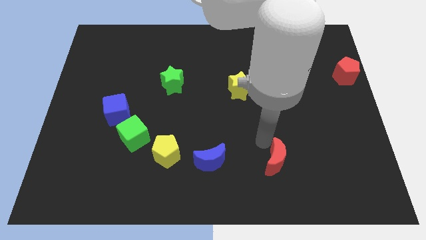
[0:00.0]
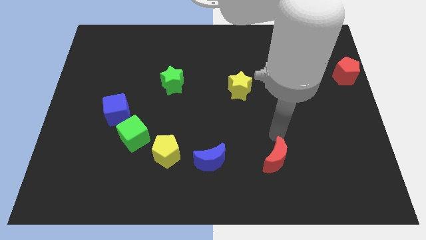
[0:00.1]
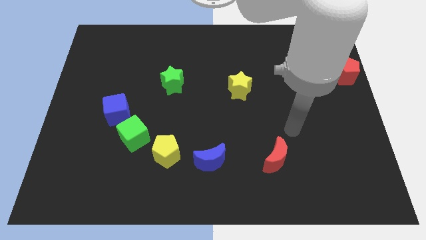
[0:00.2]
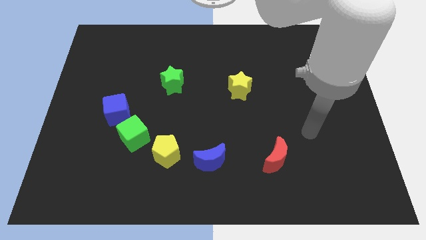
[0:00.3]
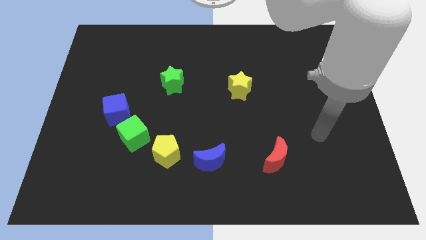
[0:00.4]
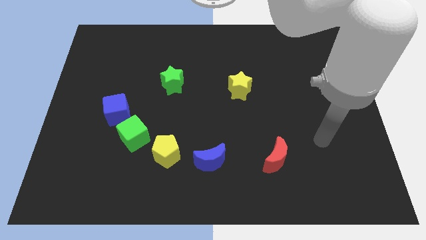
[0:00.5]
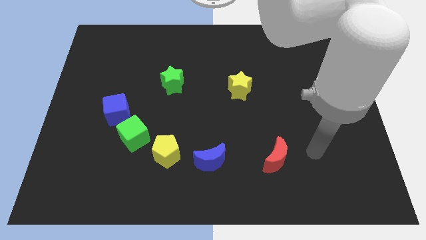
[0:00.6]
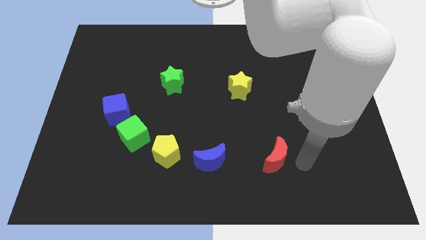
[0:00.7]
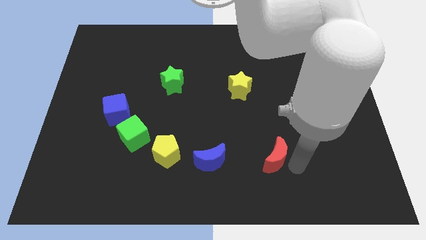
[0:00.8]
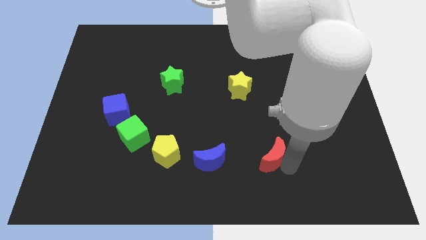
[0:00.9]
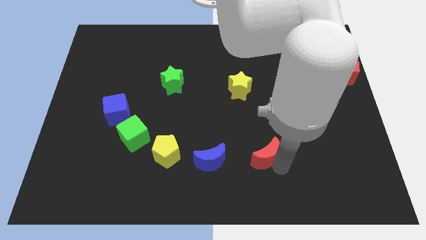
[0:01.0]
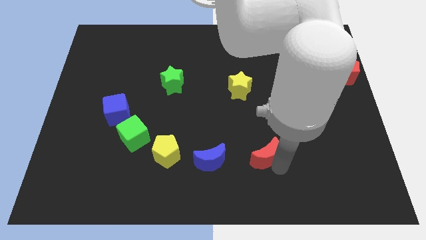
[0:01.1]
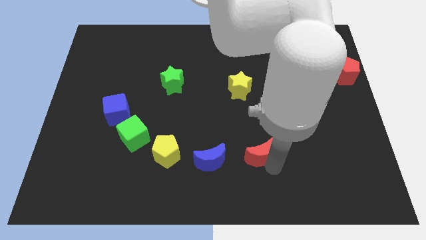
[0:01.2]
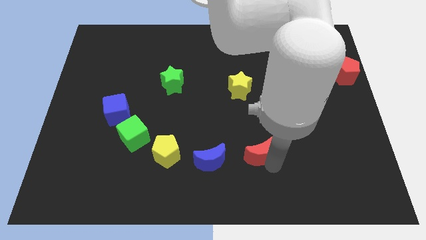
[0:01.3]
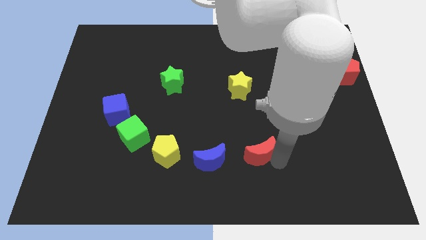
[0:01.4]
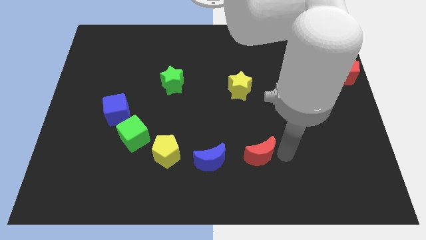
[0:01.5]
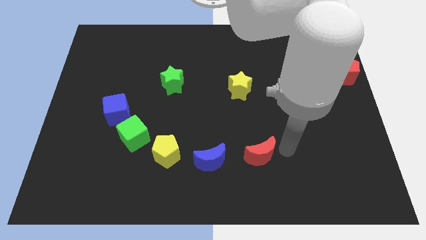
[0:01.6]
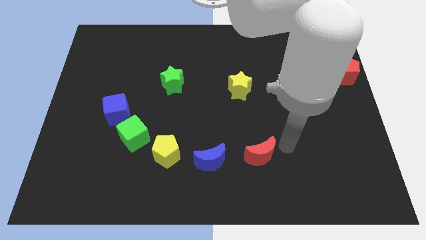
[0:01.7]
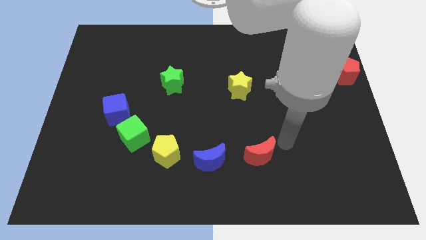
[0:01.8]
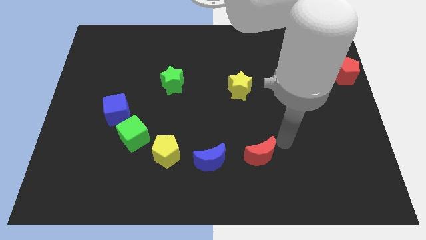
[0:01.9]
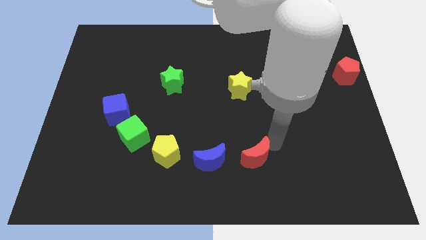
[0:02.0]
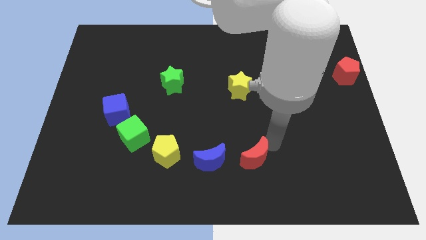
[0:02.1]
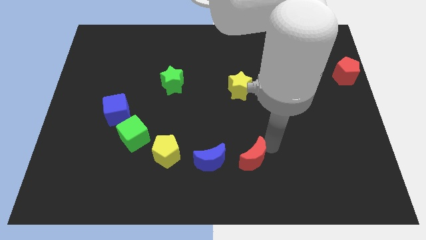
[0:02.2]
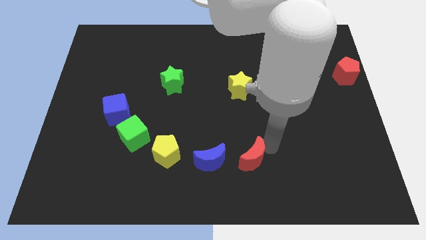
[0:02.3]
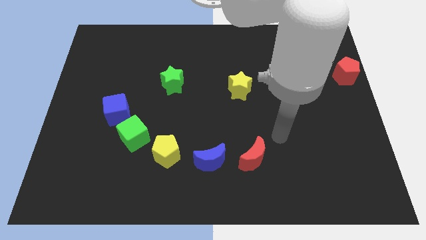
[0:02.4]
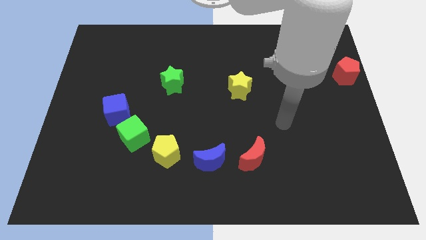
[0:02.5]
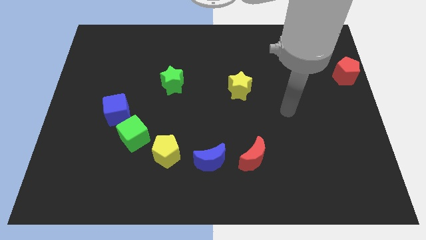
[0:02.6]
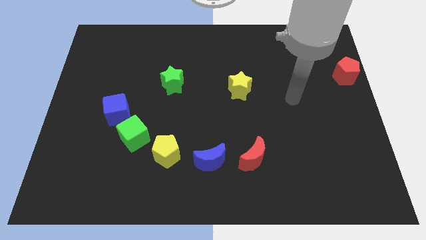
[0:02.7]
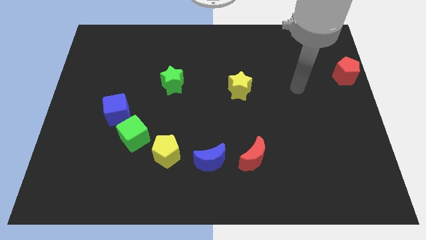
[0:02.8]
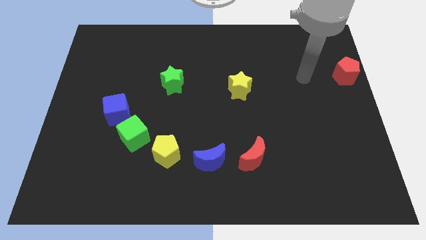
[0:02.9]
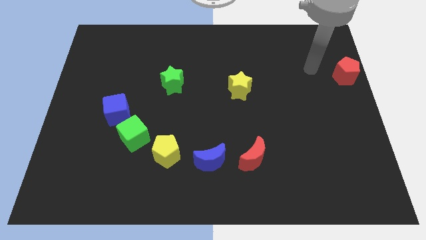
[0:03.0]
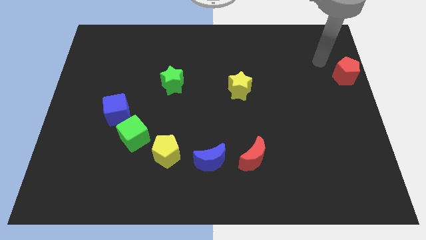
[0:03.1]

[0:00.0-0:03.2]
push the red crescent towards the blue crescent

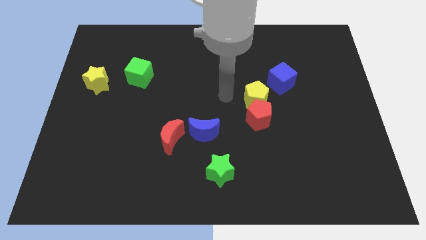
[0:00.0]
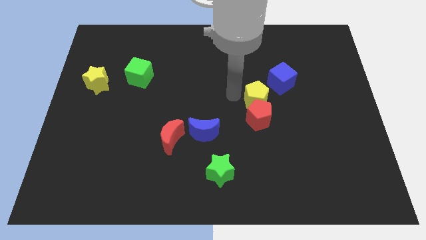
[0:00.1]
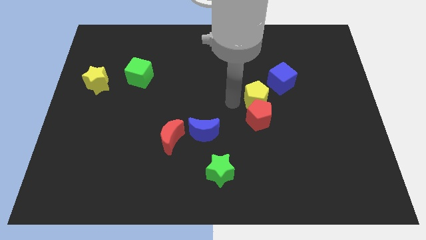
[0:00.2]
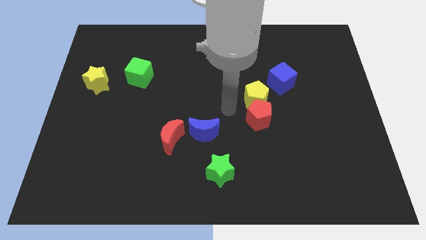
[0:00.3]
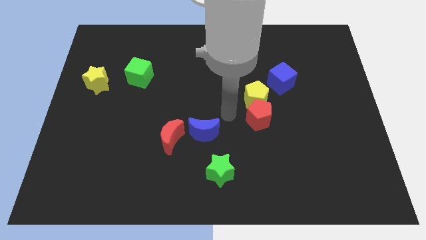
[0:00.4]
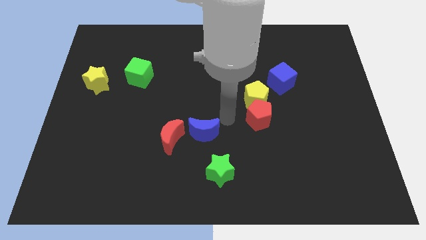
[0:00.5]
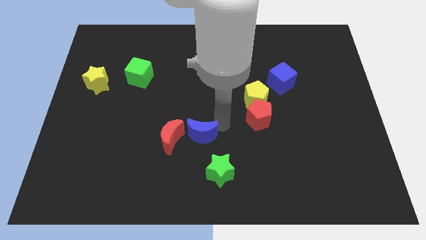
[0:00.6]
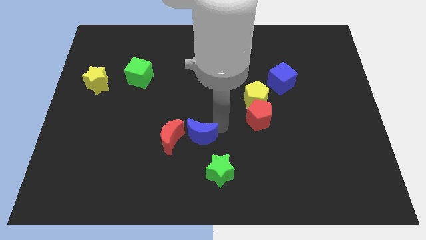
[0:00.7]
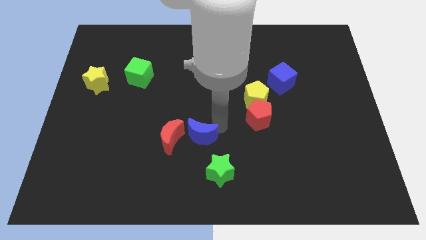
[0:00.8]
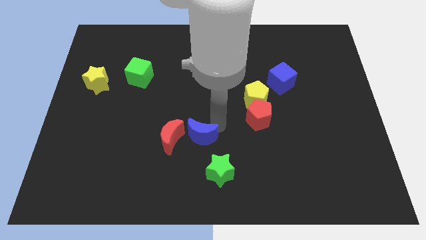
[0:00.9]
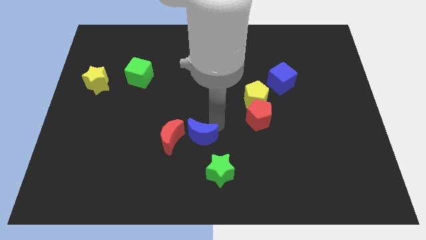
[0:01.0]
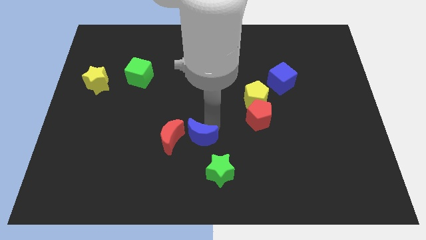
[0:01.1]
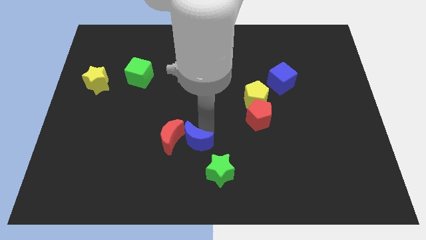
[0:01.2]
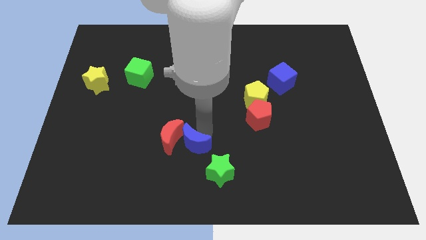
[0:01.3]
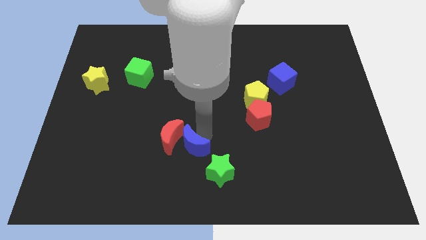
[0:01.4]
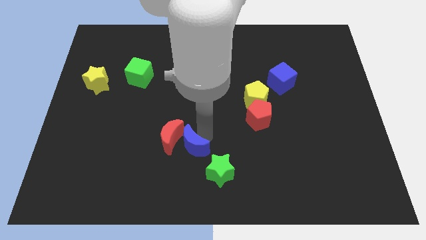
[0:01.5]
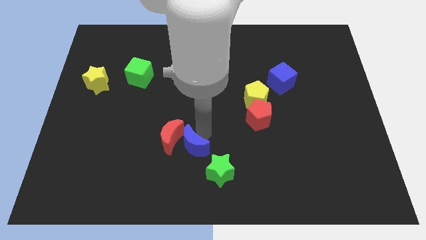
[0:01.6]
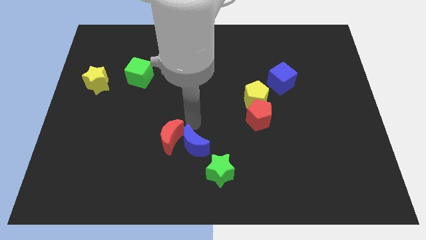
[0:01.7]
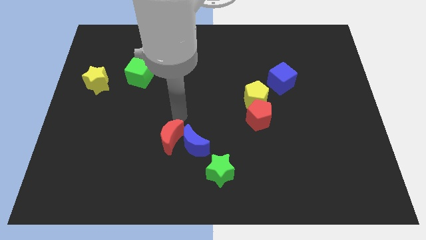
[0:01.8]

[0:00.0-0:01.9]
move the blue crescent slightly down

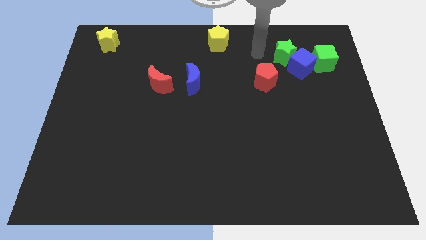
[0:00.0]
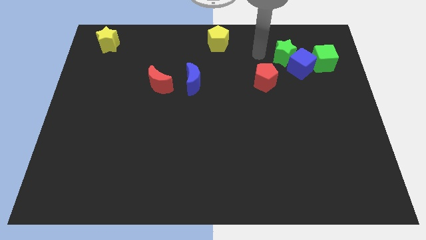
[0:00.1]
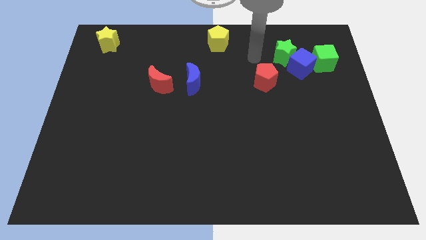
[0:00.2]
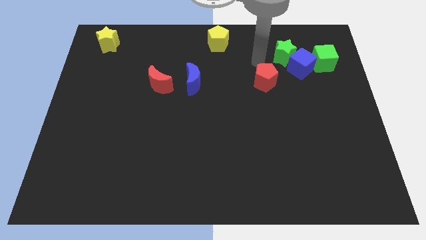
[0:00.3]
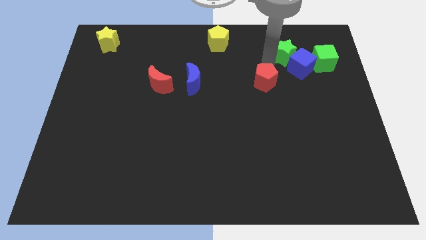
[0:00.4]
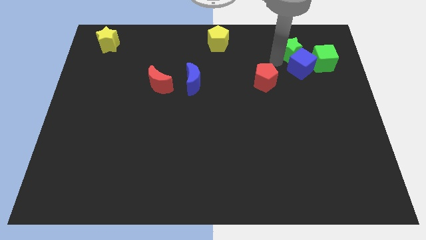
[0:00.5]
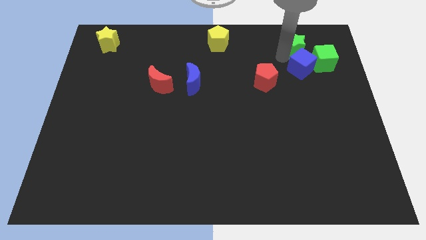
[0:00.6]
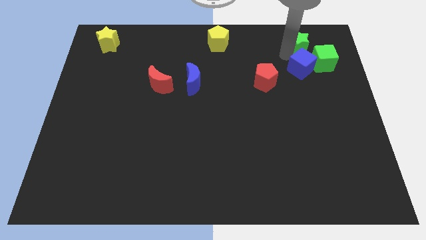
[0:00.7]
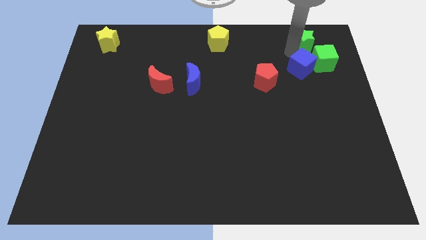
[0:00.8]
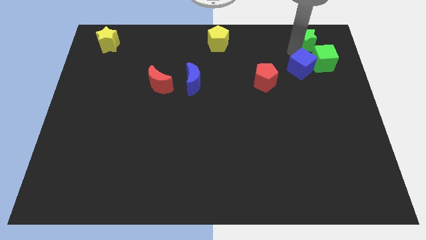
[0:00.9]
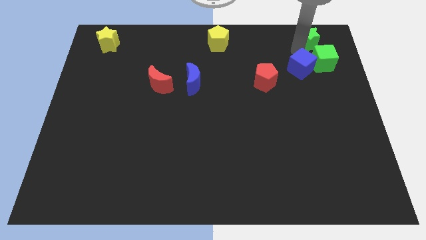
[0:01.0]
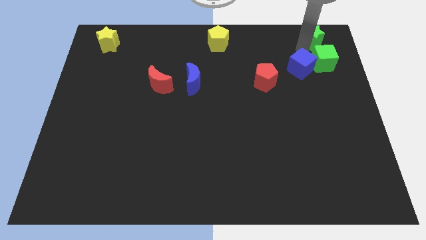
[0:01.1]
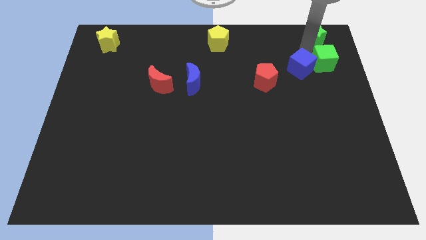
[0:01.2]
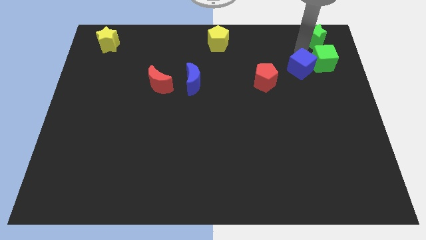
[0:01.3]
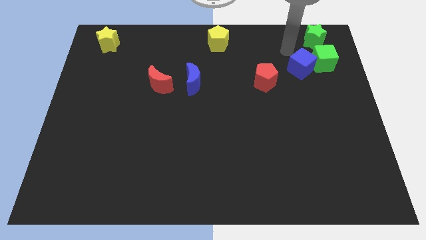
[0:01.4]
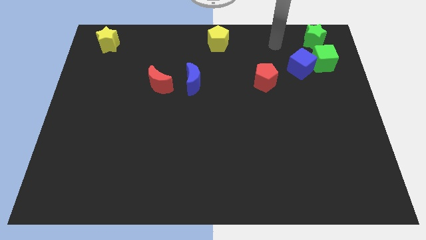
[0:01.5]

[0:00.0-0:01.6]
place the green star above the green cube

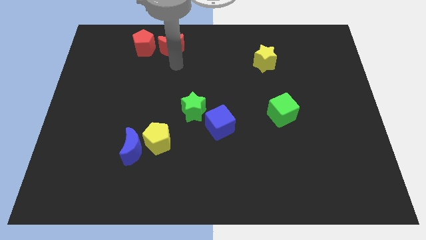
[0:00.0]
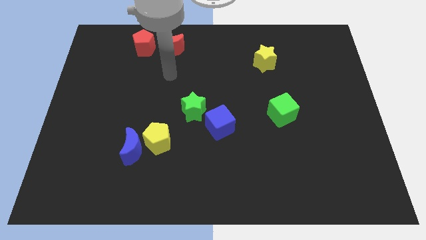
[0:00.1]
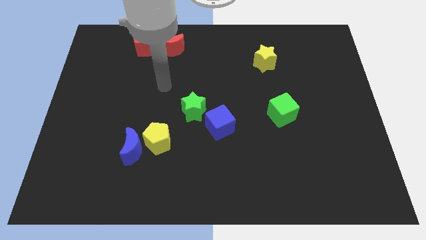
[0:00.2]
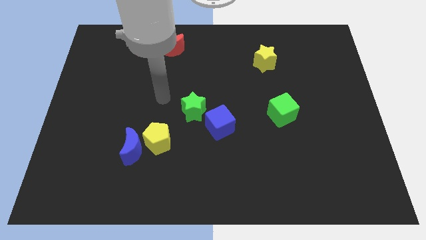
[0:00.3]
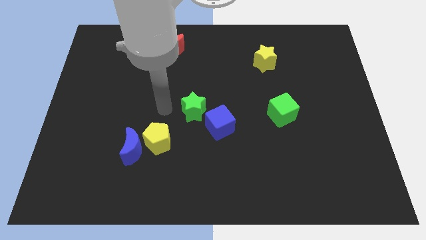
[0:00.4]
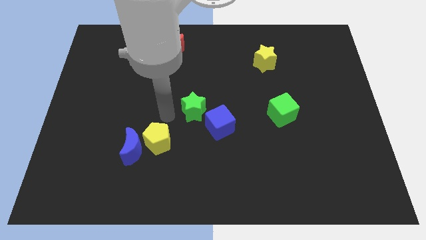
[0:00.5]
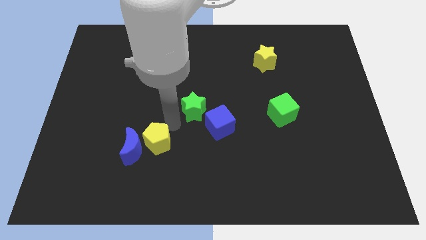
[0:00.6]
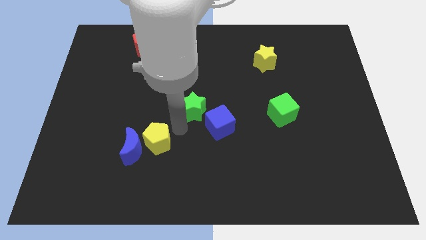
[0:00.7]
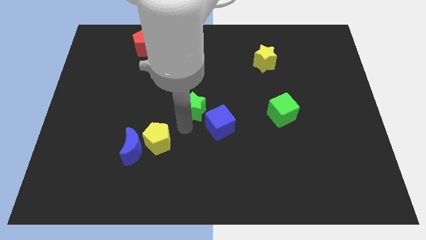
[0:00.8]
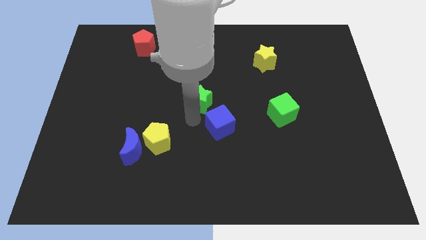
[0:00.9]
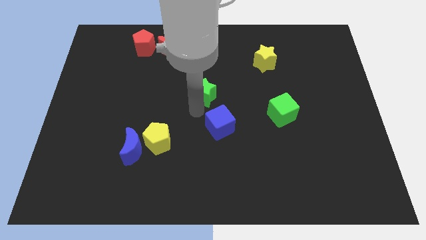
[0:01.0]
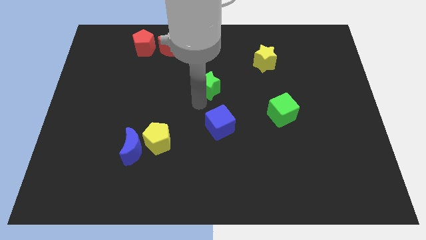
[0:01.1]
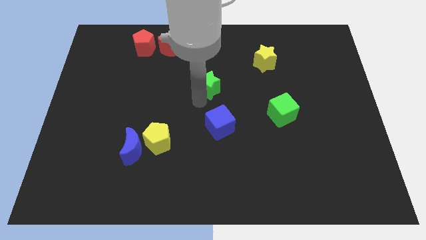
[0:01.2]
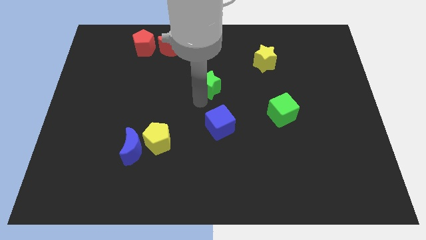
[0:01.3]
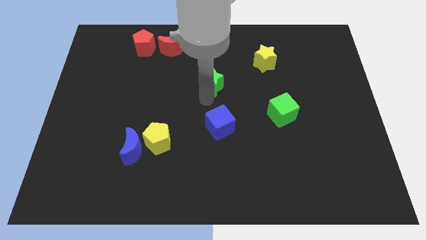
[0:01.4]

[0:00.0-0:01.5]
move the green star slightly up

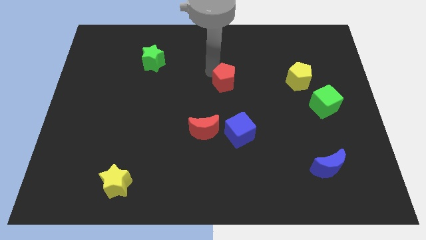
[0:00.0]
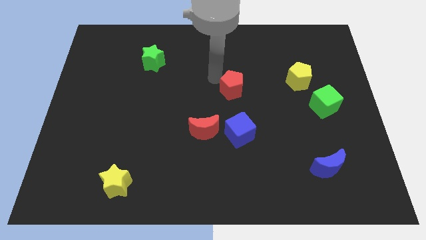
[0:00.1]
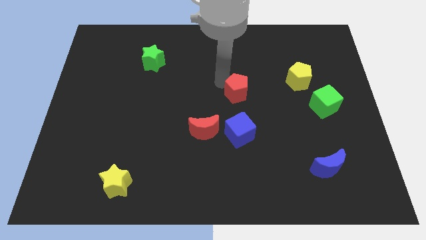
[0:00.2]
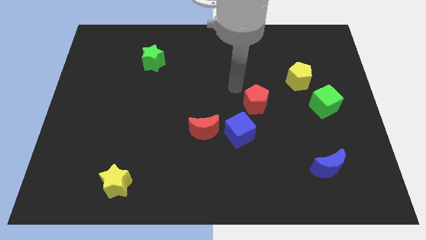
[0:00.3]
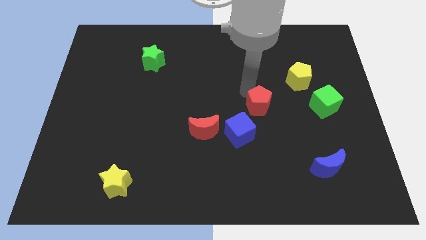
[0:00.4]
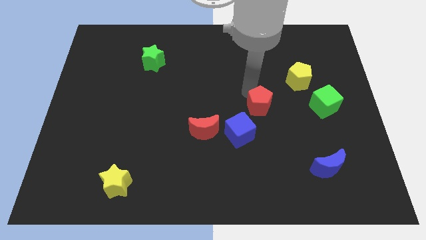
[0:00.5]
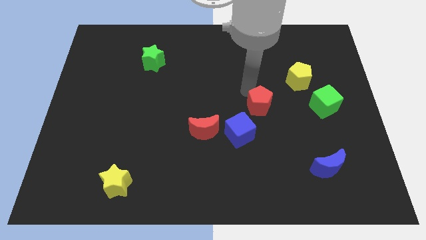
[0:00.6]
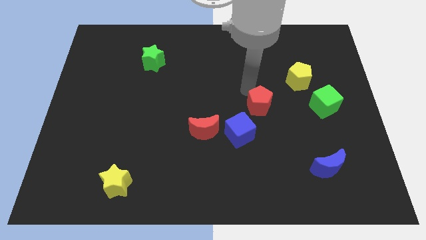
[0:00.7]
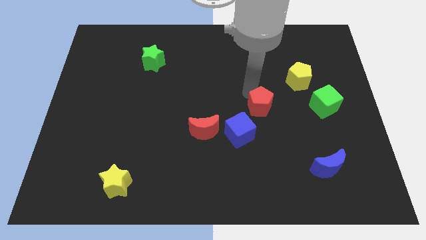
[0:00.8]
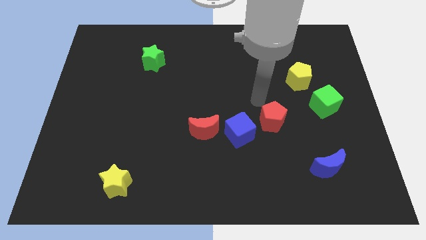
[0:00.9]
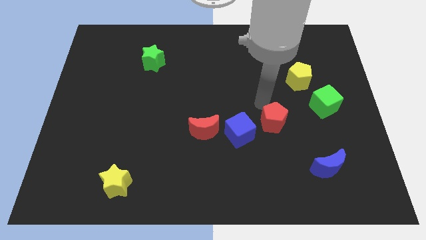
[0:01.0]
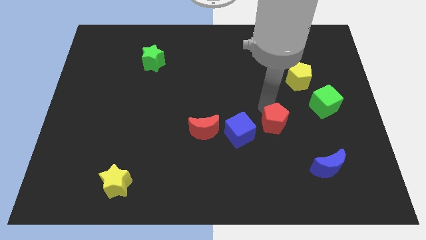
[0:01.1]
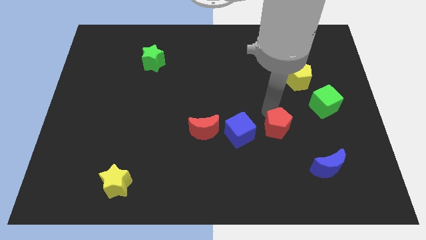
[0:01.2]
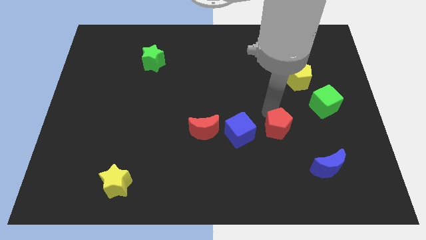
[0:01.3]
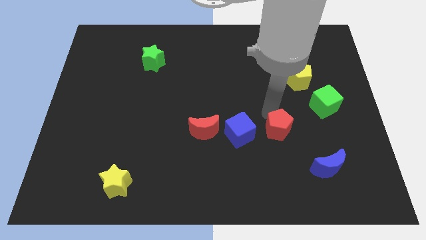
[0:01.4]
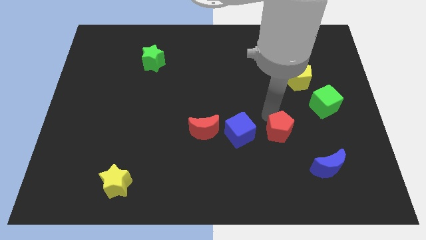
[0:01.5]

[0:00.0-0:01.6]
move the red pentagon to the right of the blue cube
